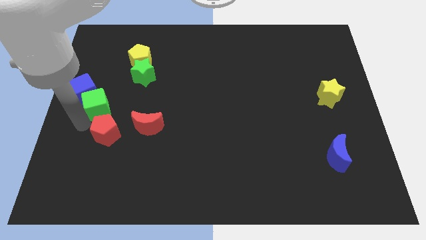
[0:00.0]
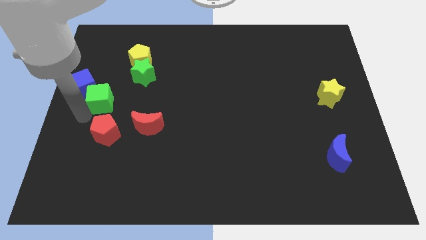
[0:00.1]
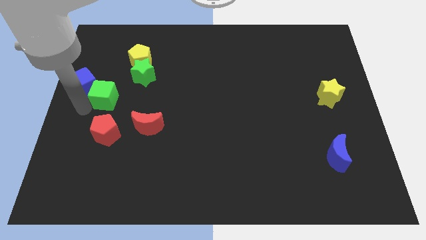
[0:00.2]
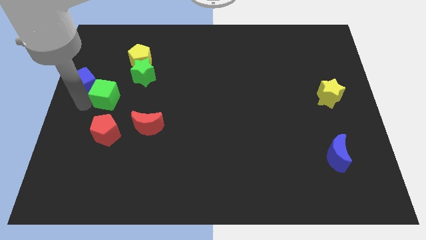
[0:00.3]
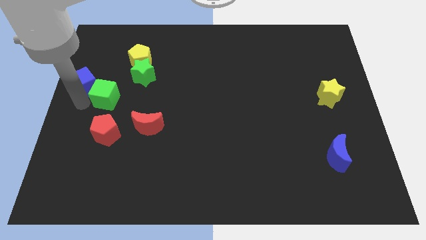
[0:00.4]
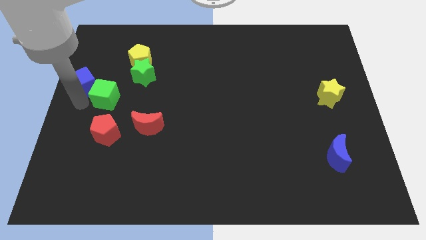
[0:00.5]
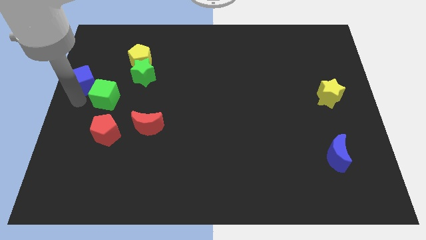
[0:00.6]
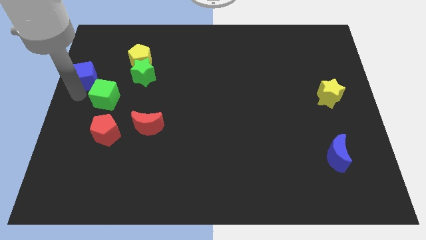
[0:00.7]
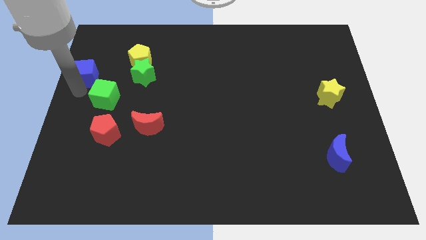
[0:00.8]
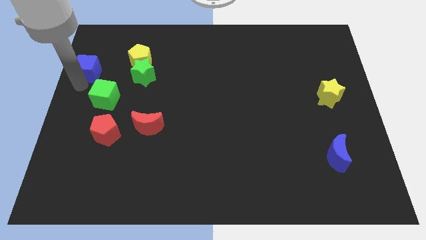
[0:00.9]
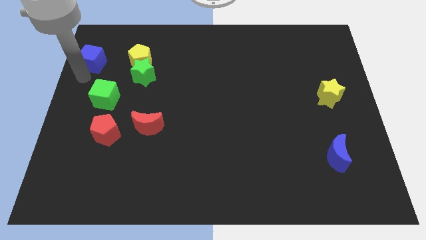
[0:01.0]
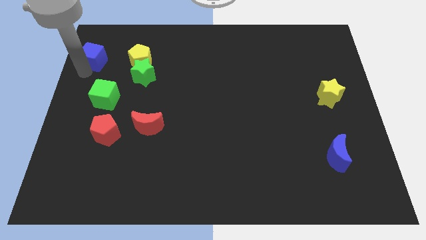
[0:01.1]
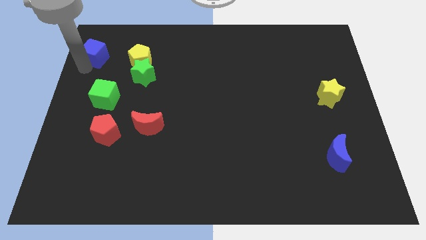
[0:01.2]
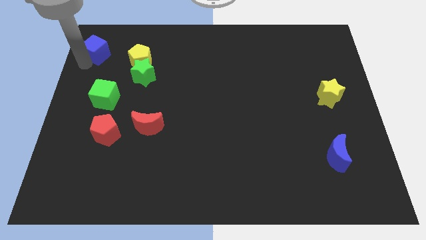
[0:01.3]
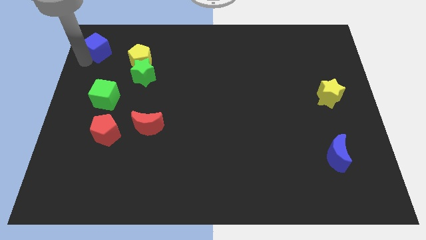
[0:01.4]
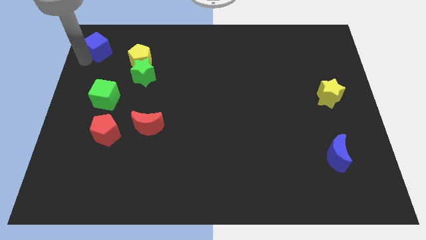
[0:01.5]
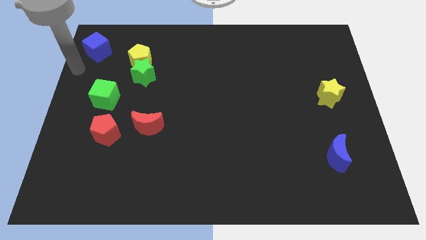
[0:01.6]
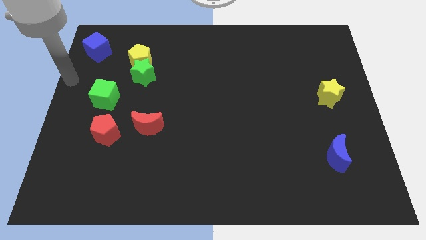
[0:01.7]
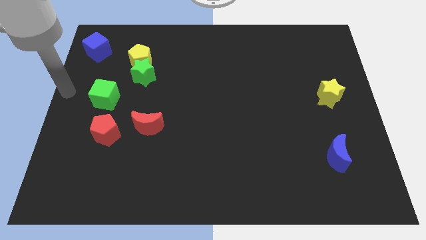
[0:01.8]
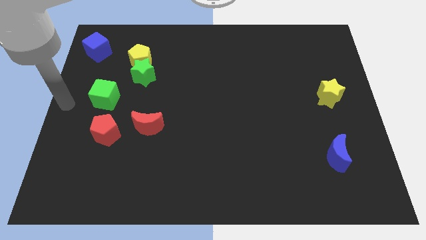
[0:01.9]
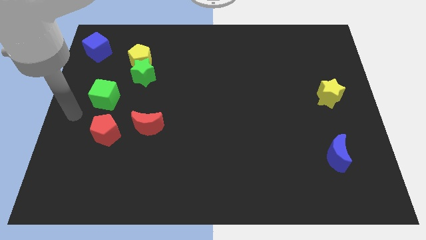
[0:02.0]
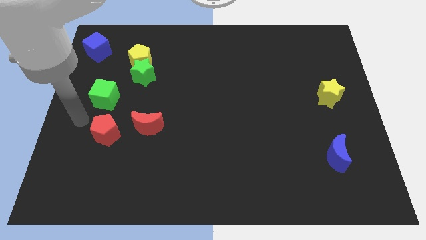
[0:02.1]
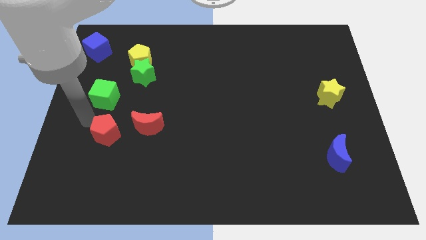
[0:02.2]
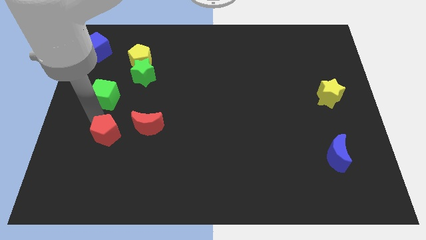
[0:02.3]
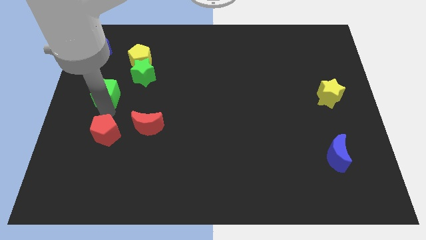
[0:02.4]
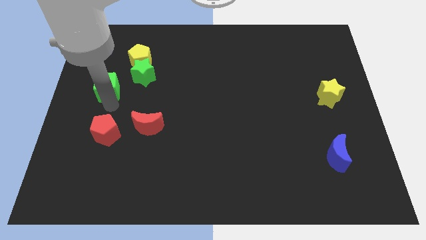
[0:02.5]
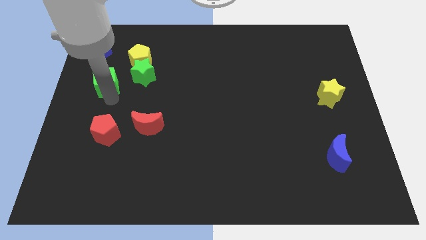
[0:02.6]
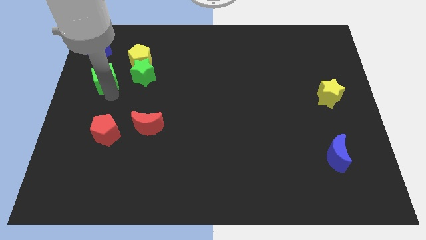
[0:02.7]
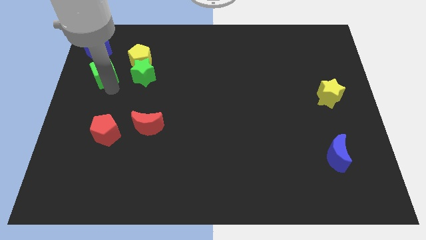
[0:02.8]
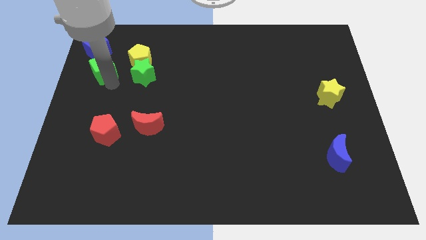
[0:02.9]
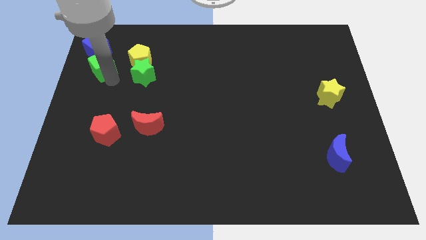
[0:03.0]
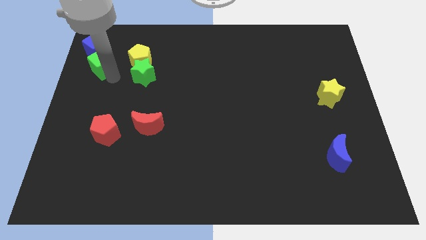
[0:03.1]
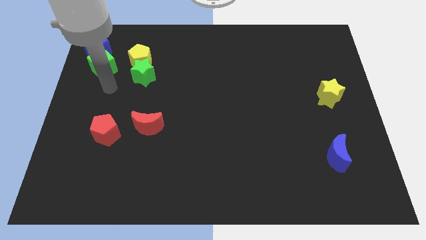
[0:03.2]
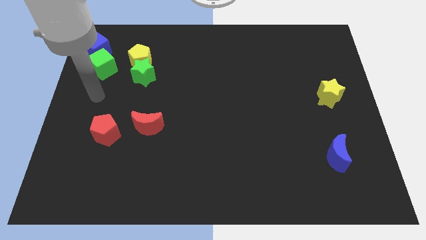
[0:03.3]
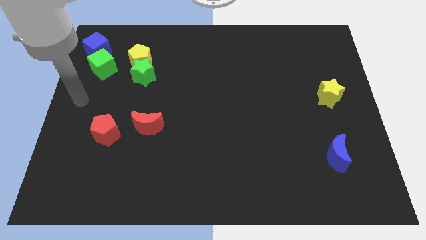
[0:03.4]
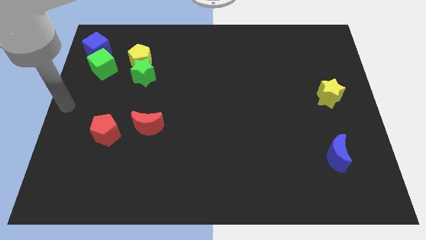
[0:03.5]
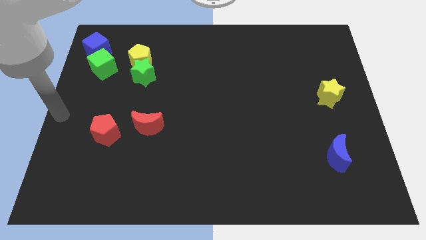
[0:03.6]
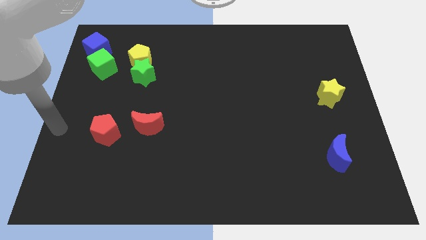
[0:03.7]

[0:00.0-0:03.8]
push the green cube and blue cube at the top left of the board

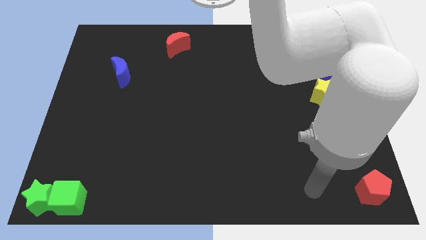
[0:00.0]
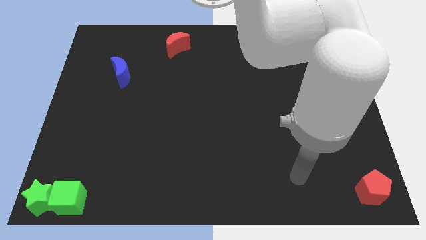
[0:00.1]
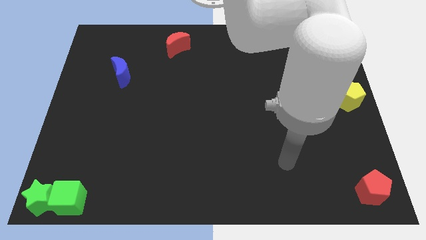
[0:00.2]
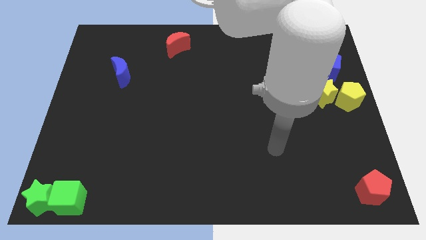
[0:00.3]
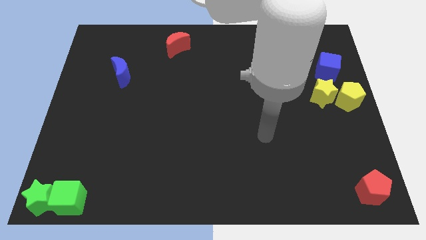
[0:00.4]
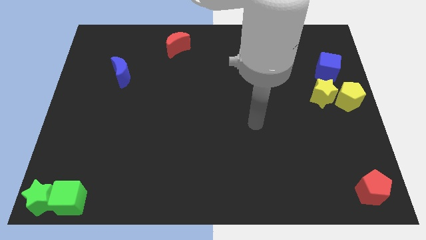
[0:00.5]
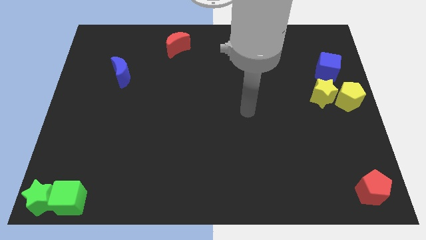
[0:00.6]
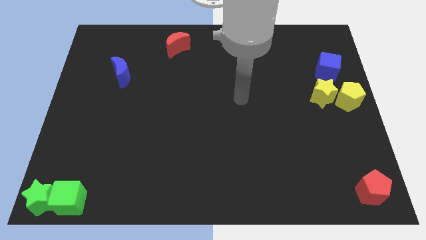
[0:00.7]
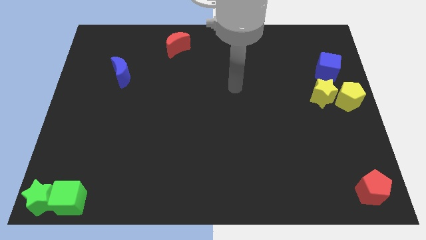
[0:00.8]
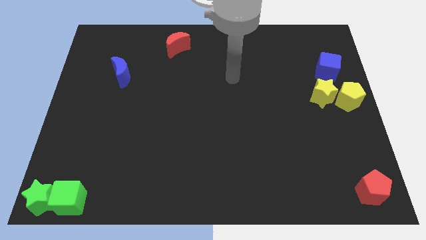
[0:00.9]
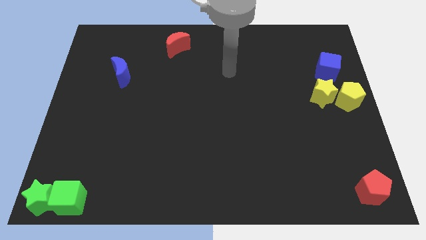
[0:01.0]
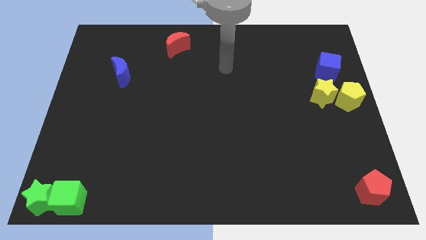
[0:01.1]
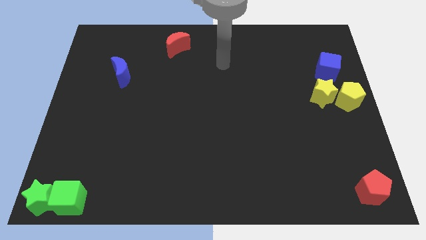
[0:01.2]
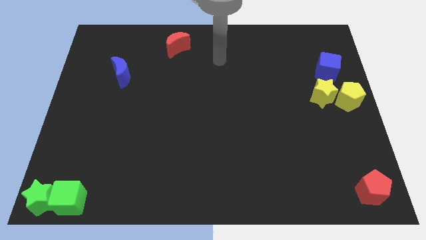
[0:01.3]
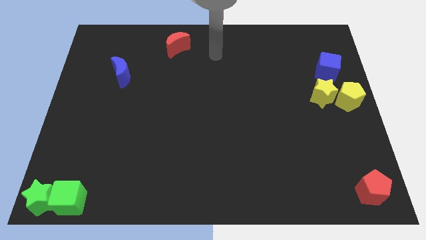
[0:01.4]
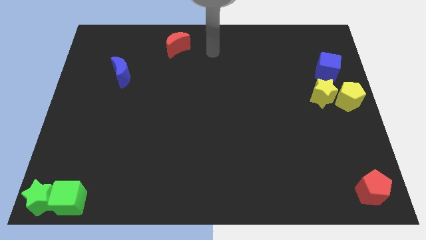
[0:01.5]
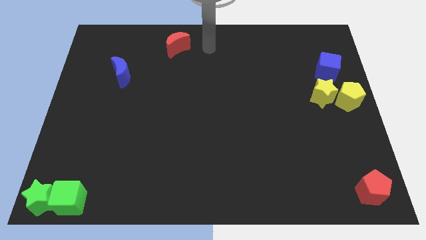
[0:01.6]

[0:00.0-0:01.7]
move your hand towards the top center

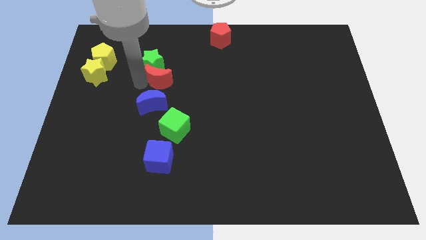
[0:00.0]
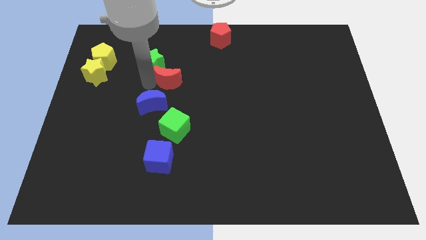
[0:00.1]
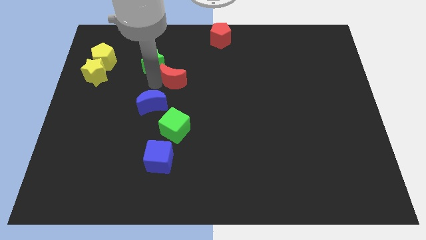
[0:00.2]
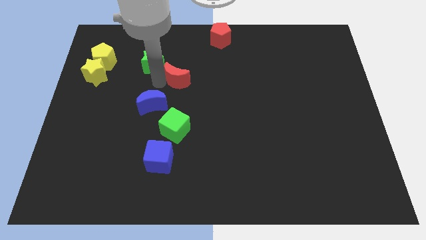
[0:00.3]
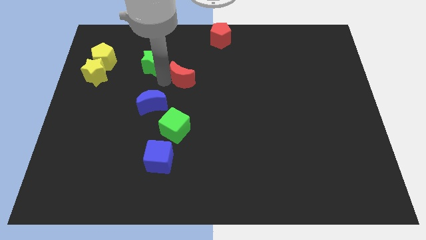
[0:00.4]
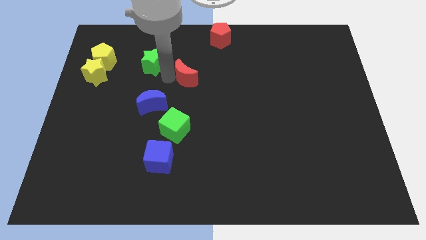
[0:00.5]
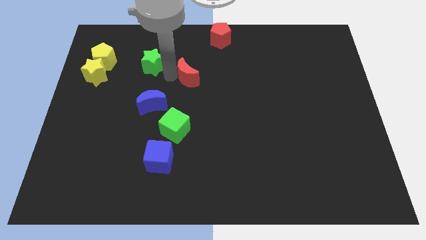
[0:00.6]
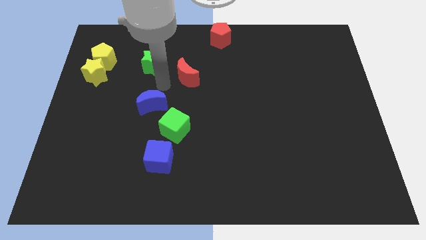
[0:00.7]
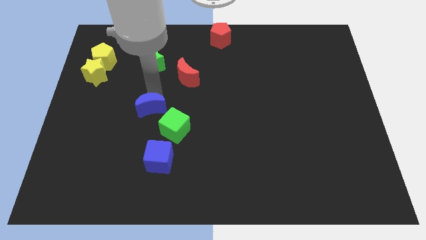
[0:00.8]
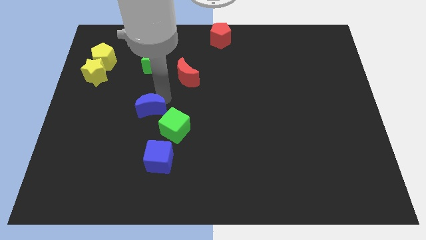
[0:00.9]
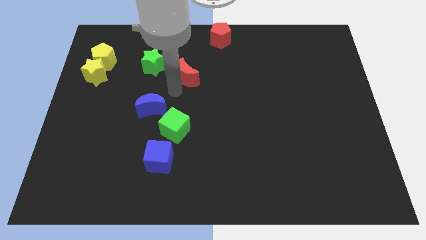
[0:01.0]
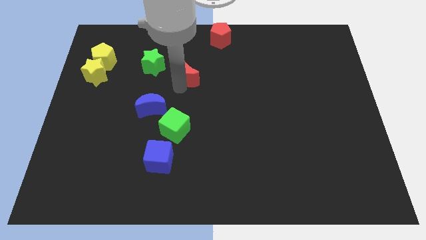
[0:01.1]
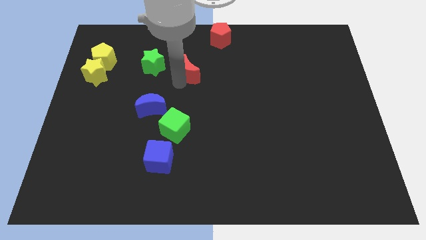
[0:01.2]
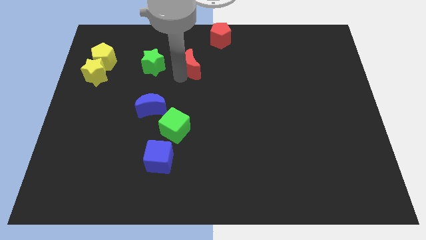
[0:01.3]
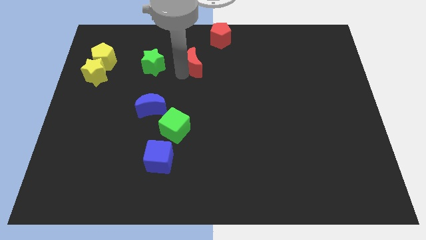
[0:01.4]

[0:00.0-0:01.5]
move the red crescent to the right of the green star

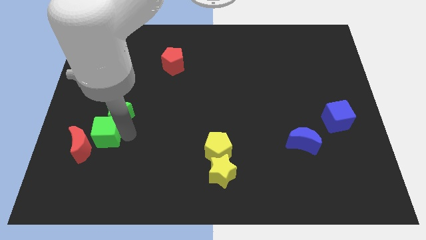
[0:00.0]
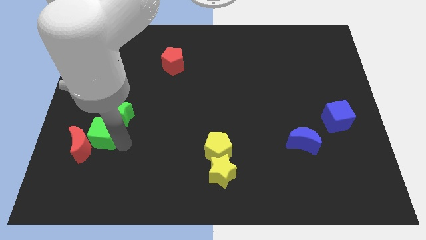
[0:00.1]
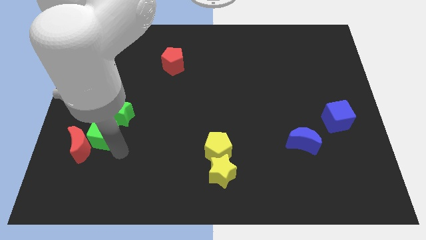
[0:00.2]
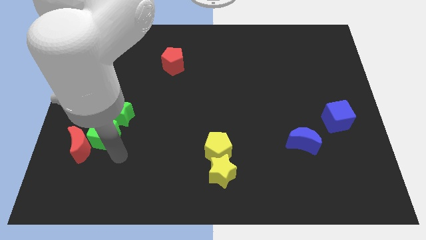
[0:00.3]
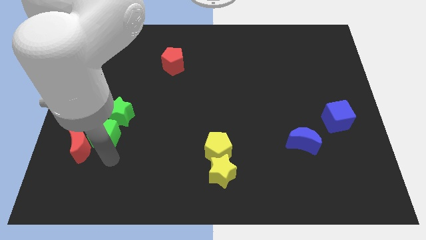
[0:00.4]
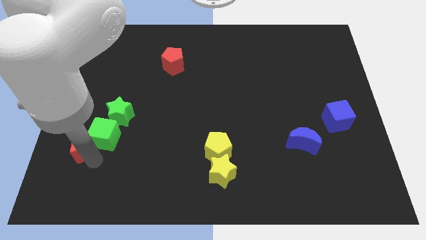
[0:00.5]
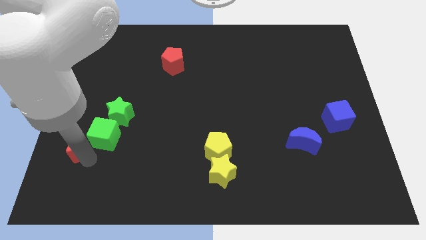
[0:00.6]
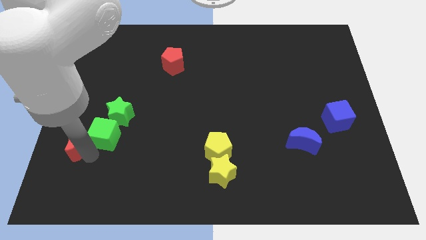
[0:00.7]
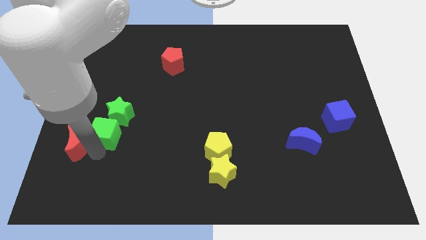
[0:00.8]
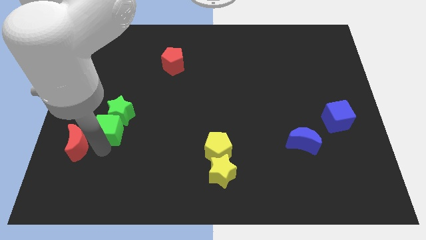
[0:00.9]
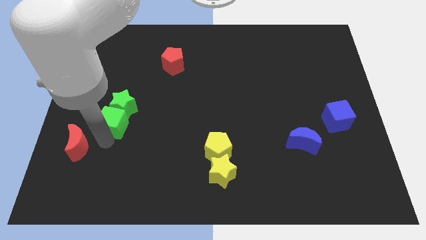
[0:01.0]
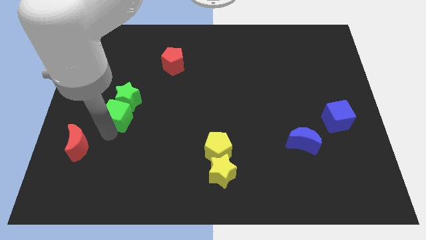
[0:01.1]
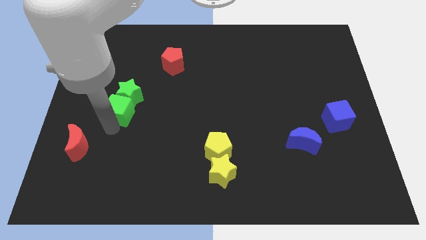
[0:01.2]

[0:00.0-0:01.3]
push the green cube and green star towards the red pentagon

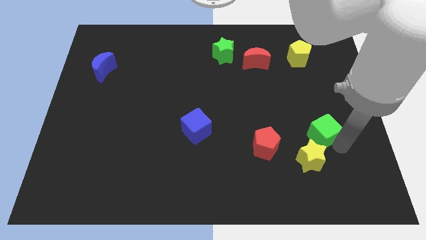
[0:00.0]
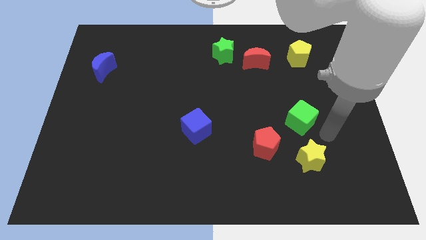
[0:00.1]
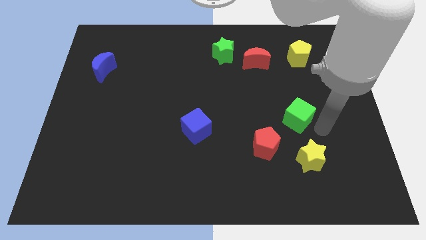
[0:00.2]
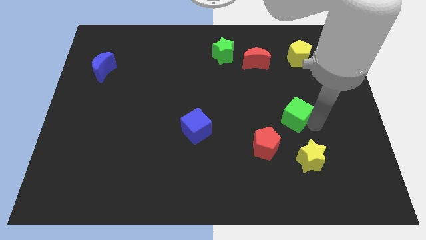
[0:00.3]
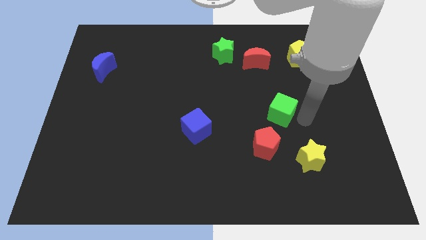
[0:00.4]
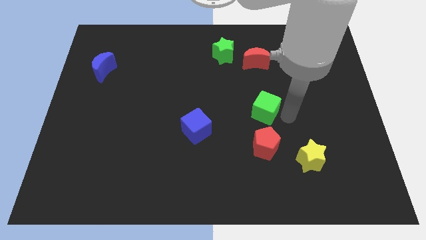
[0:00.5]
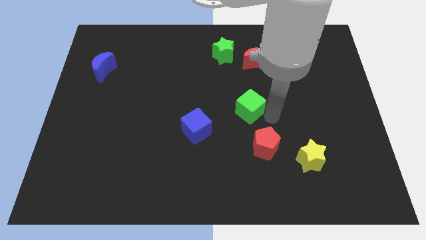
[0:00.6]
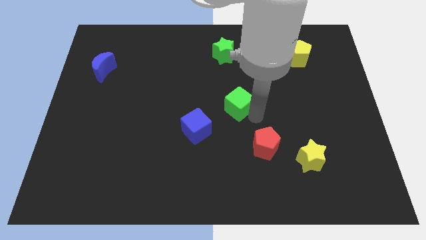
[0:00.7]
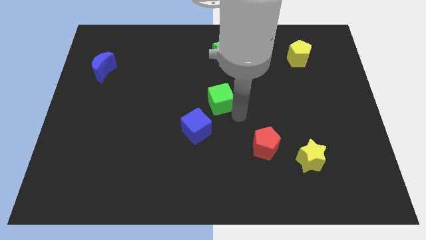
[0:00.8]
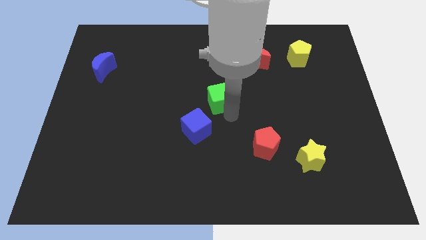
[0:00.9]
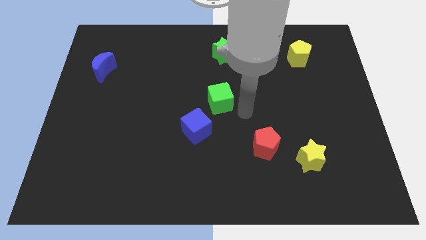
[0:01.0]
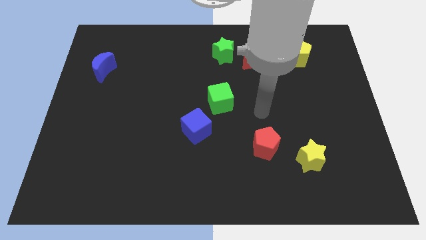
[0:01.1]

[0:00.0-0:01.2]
place the green cube at the top right side of blue cube
